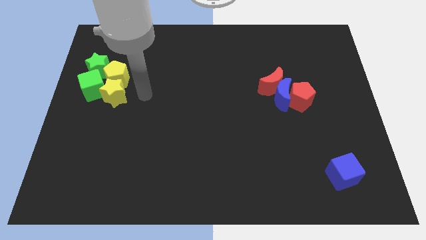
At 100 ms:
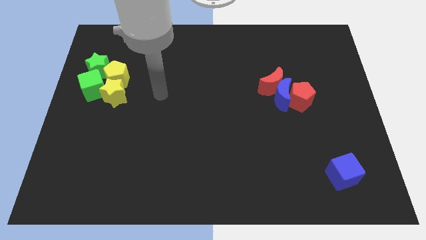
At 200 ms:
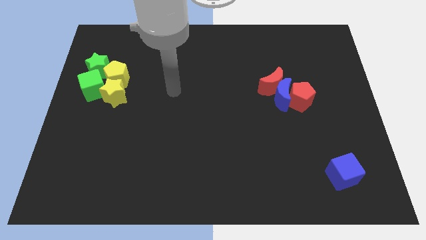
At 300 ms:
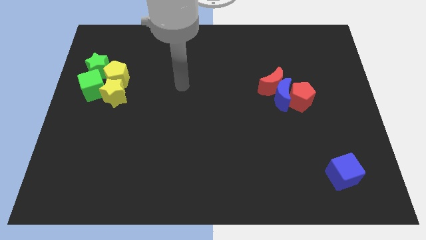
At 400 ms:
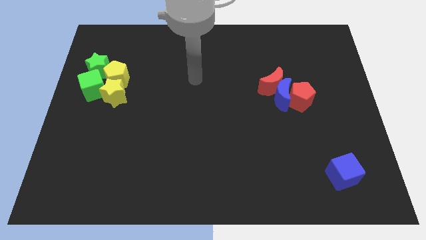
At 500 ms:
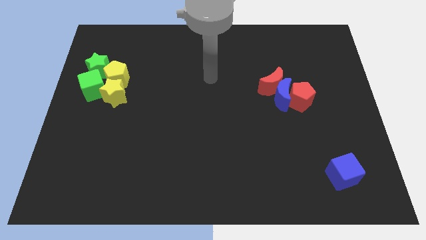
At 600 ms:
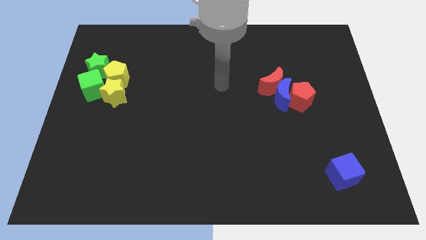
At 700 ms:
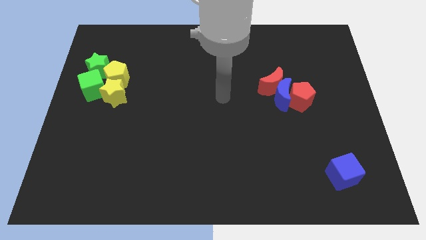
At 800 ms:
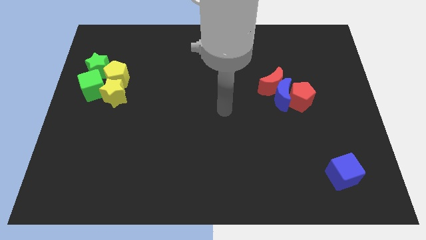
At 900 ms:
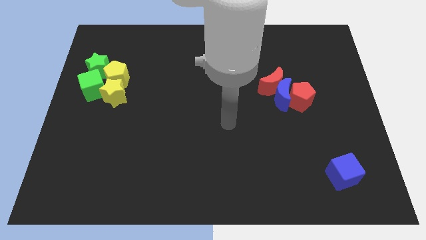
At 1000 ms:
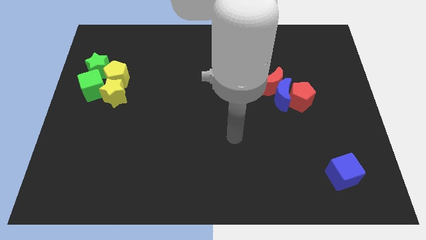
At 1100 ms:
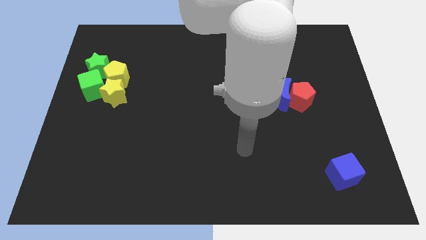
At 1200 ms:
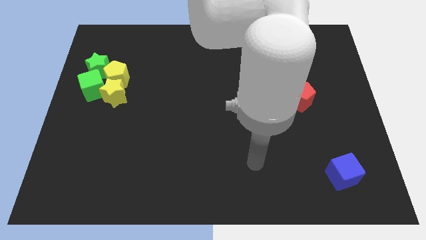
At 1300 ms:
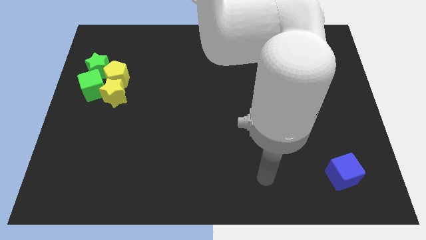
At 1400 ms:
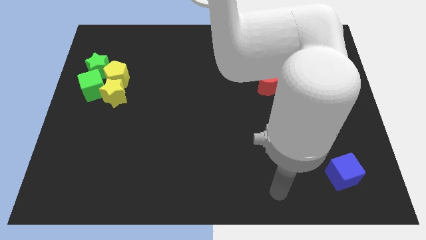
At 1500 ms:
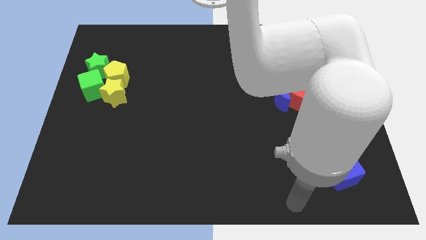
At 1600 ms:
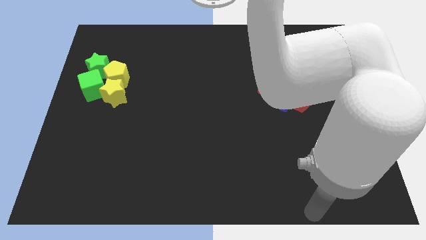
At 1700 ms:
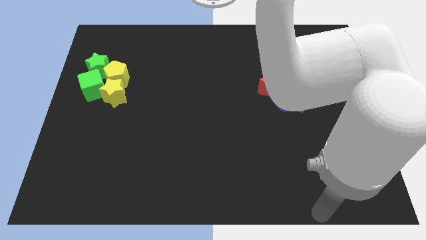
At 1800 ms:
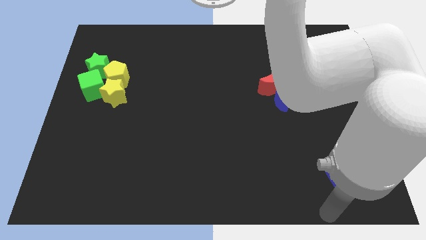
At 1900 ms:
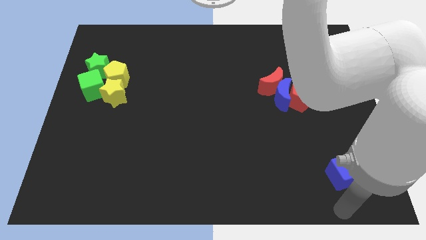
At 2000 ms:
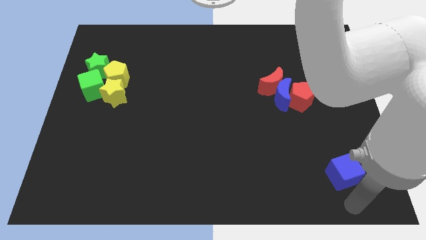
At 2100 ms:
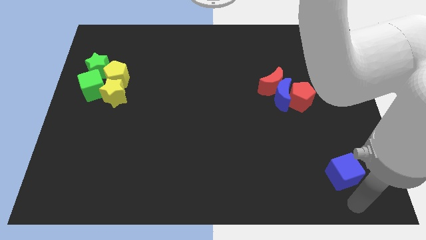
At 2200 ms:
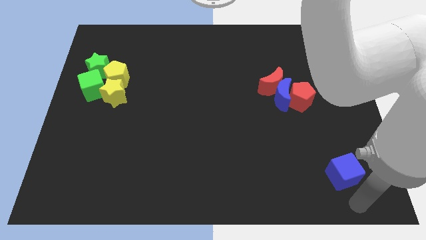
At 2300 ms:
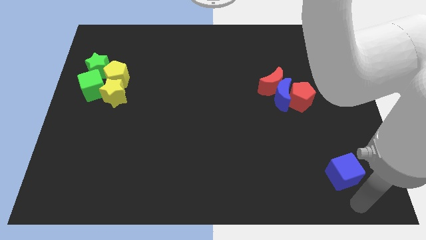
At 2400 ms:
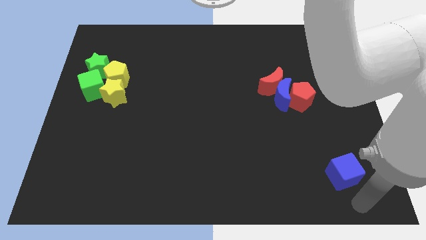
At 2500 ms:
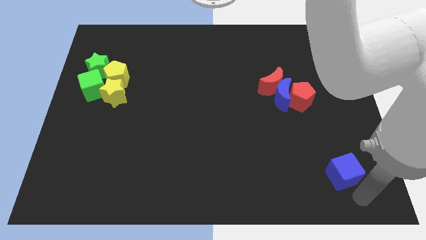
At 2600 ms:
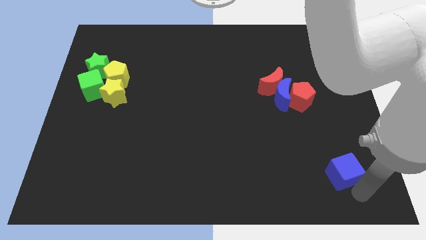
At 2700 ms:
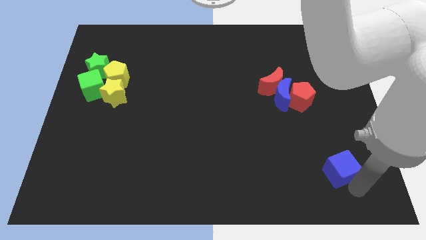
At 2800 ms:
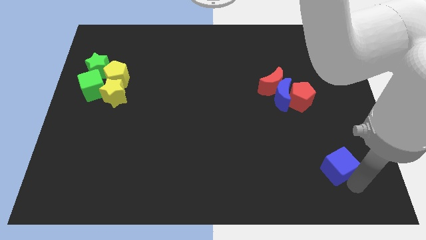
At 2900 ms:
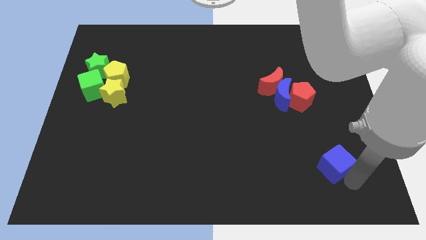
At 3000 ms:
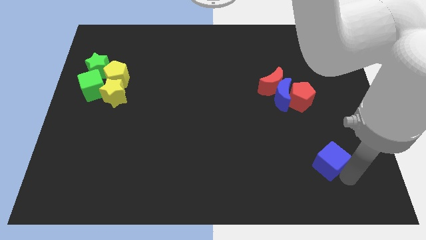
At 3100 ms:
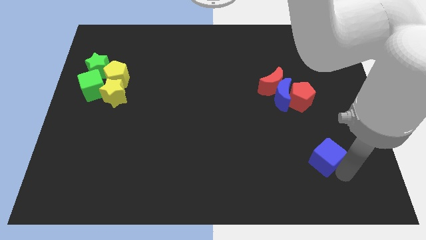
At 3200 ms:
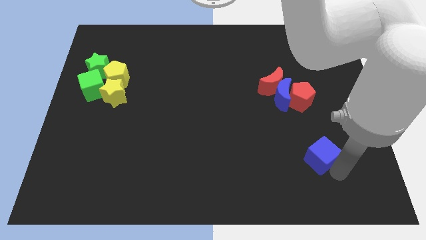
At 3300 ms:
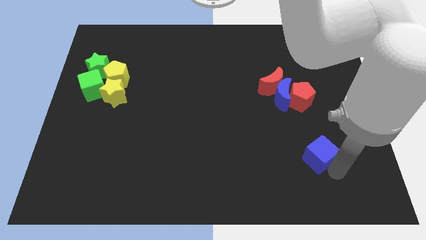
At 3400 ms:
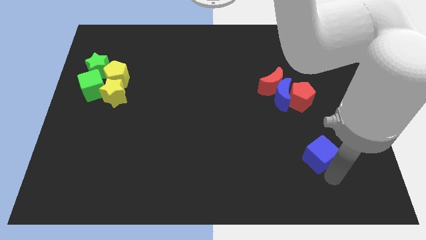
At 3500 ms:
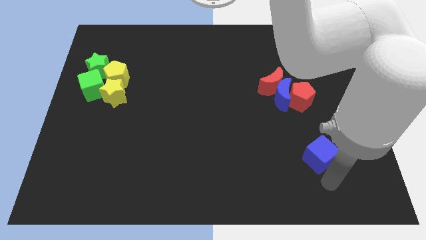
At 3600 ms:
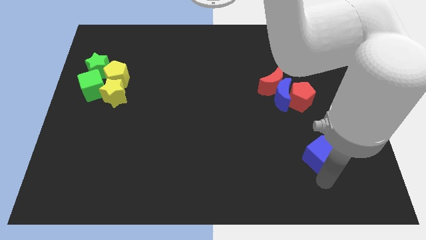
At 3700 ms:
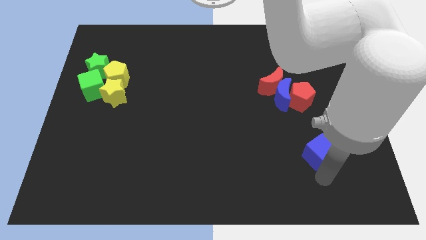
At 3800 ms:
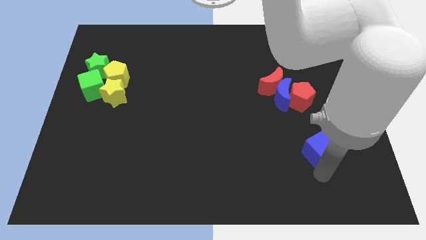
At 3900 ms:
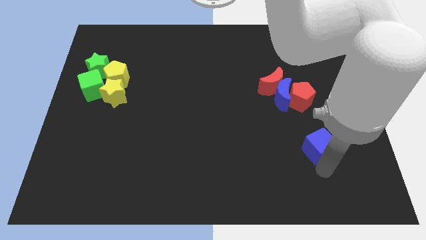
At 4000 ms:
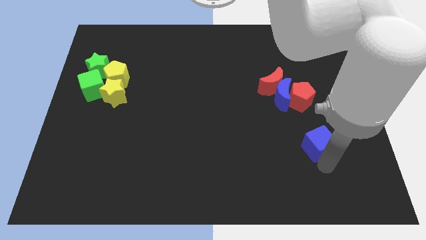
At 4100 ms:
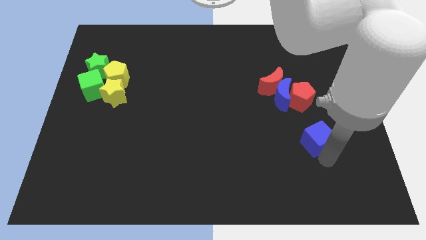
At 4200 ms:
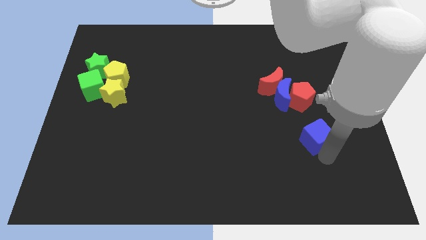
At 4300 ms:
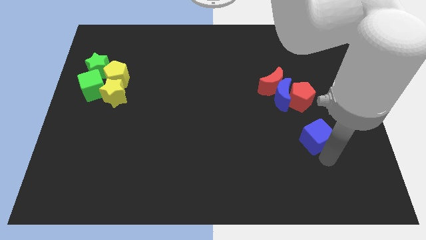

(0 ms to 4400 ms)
push the blue cube to the top of the board

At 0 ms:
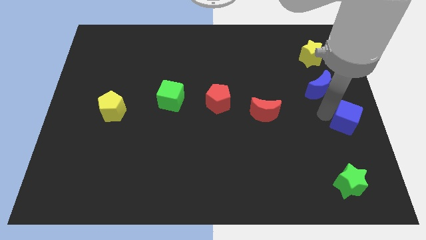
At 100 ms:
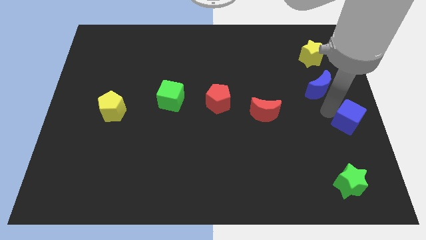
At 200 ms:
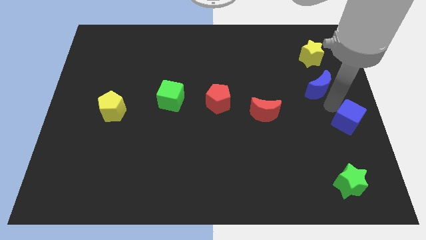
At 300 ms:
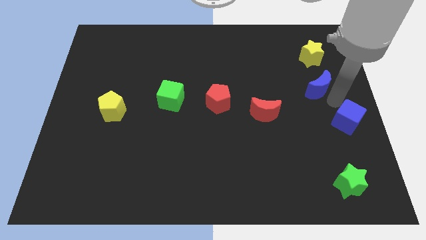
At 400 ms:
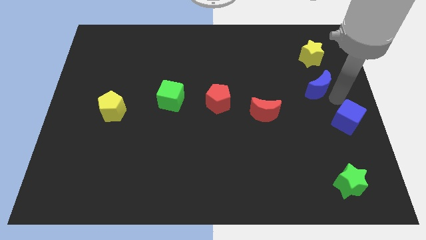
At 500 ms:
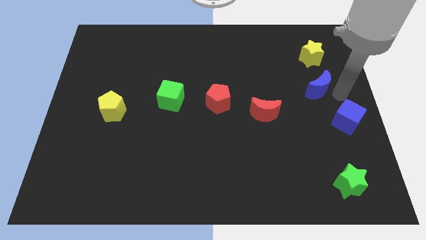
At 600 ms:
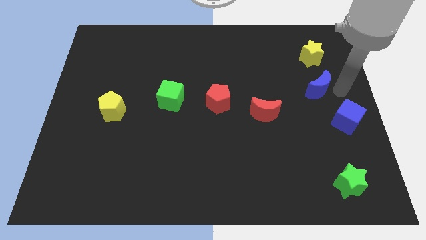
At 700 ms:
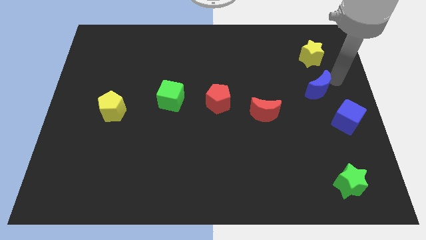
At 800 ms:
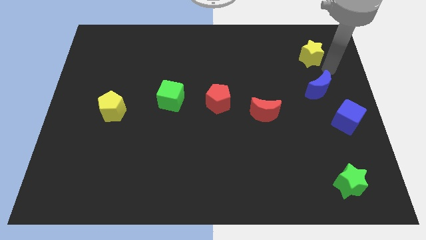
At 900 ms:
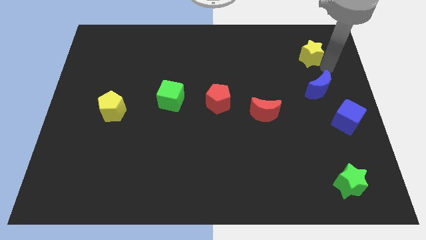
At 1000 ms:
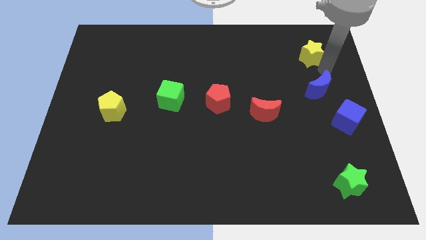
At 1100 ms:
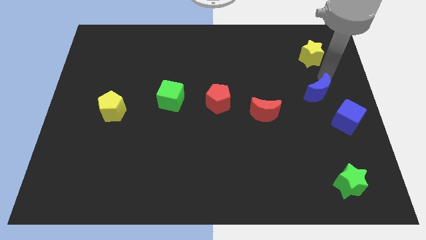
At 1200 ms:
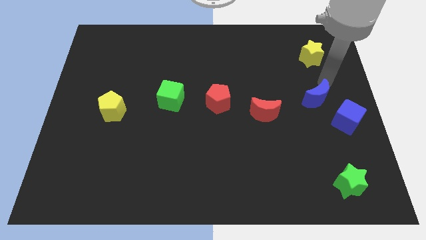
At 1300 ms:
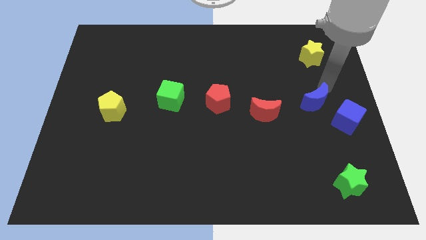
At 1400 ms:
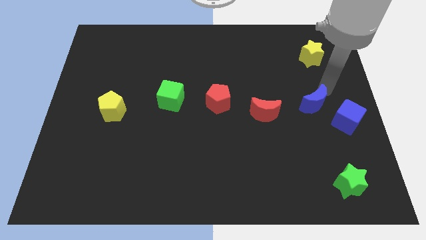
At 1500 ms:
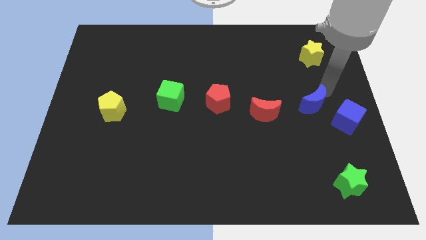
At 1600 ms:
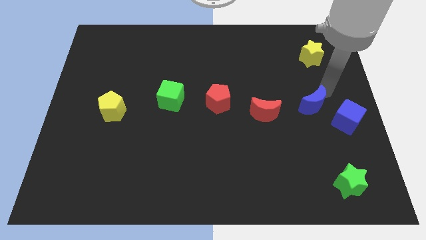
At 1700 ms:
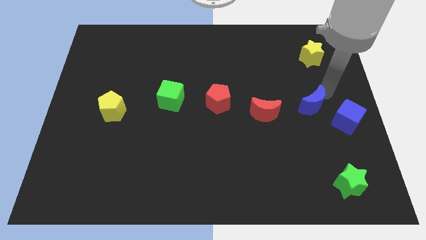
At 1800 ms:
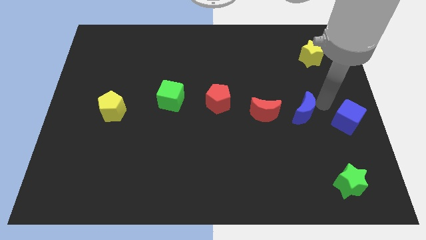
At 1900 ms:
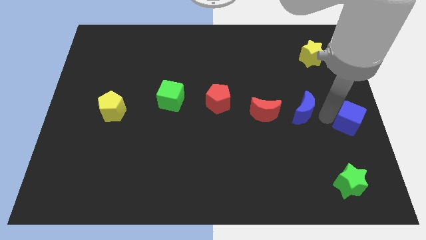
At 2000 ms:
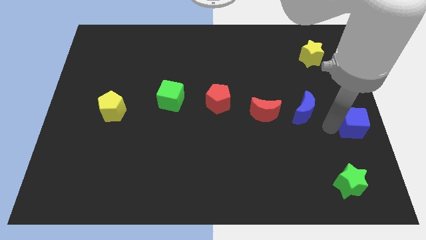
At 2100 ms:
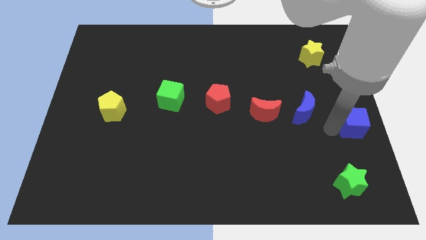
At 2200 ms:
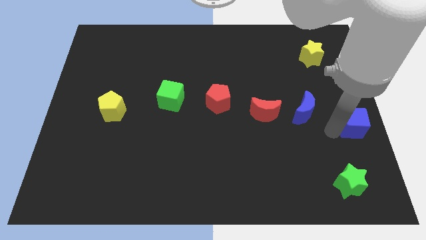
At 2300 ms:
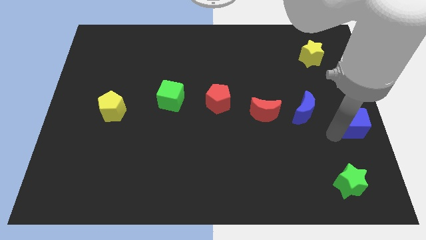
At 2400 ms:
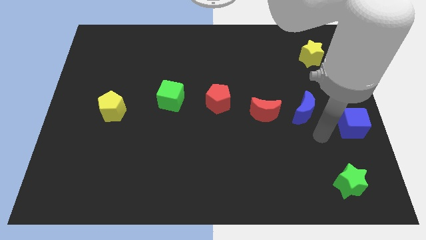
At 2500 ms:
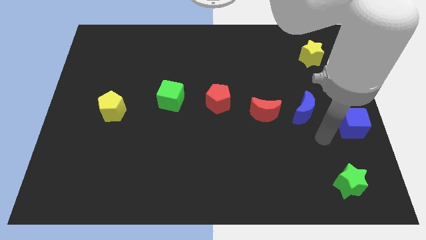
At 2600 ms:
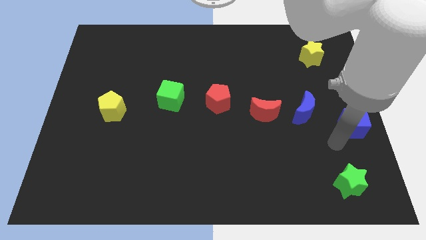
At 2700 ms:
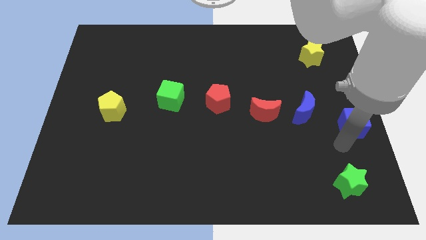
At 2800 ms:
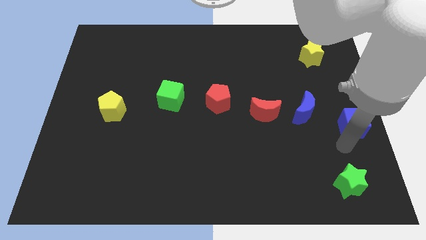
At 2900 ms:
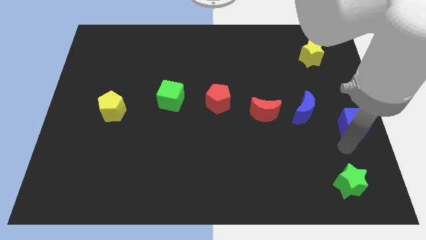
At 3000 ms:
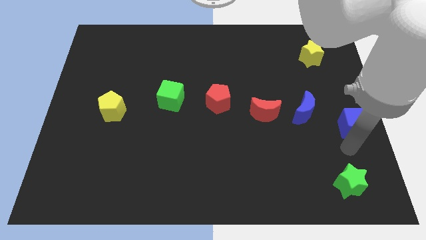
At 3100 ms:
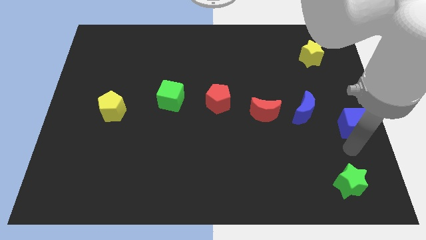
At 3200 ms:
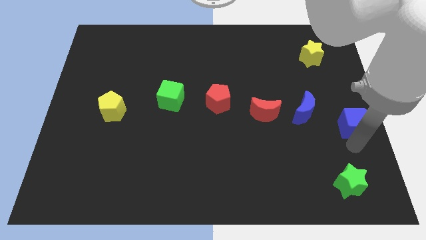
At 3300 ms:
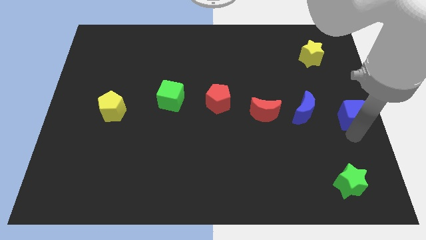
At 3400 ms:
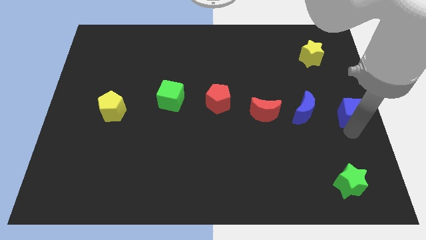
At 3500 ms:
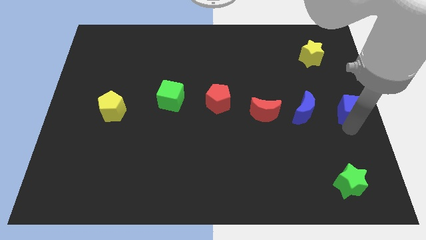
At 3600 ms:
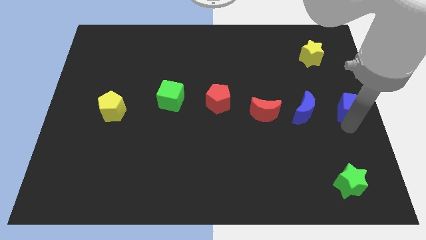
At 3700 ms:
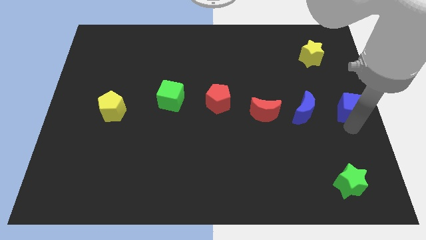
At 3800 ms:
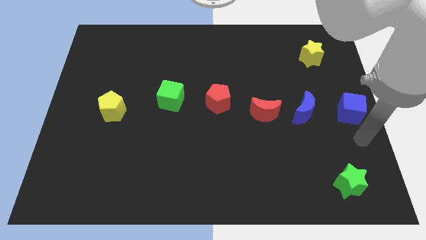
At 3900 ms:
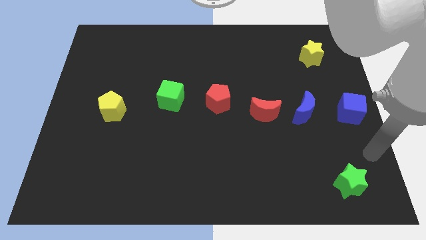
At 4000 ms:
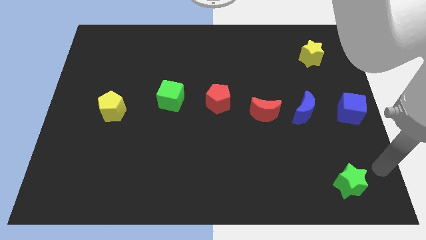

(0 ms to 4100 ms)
arrange blue blocks with the group of blocks to form a line

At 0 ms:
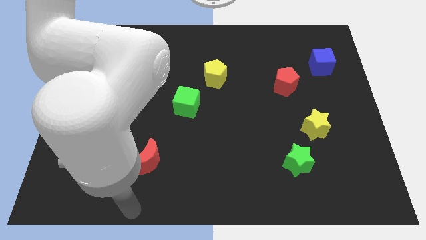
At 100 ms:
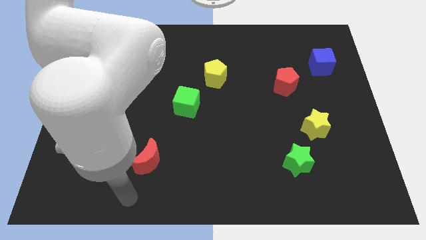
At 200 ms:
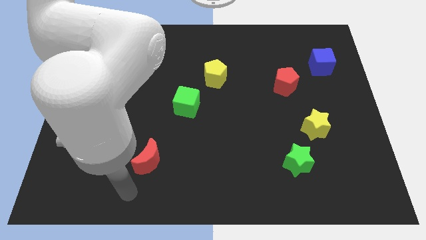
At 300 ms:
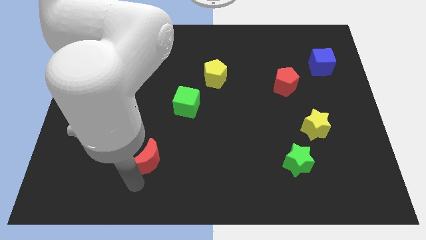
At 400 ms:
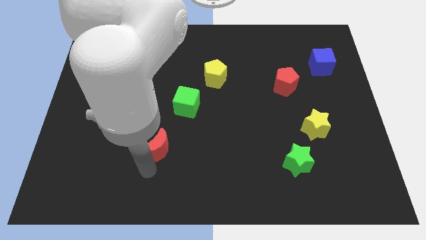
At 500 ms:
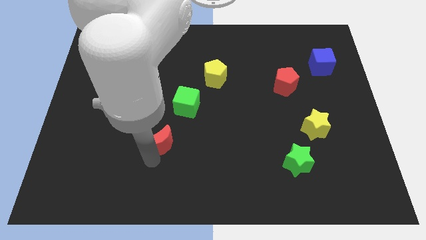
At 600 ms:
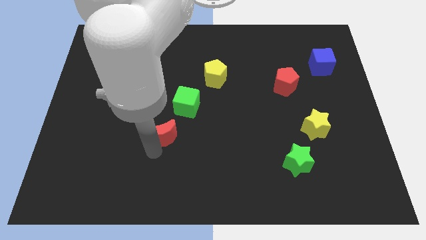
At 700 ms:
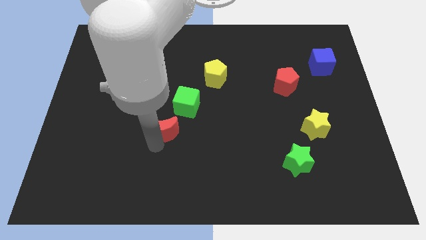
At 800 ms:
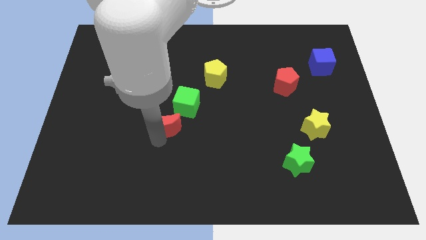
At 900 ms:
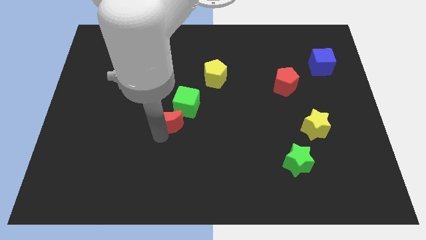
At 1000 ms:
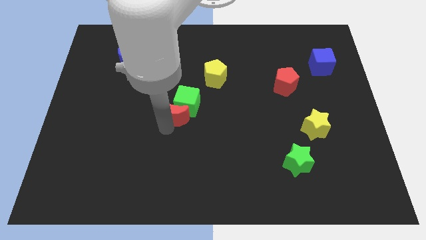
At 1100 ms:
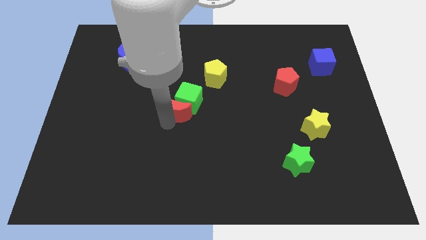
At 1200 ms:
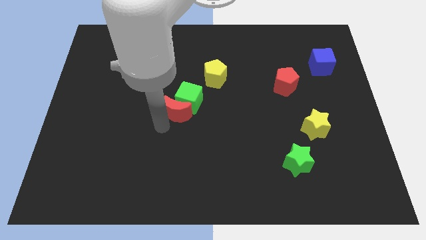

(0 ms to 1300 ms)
push the red crescent into the green cube
